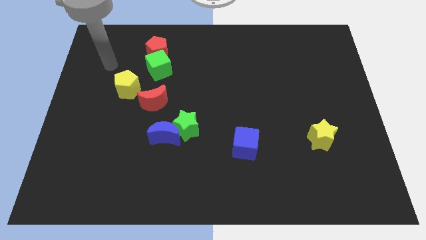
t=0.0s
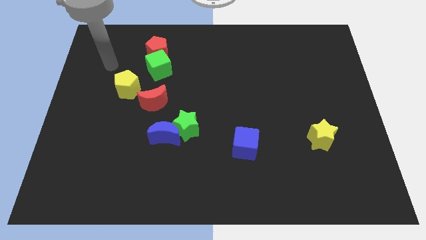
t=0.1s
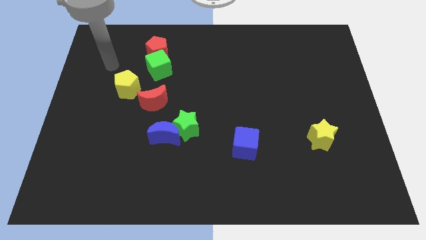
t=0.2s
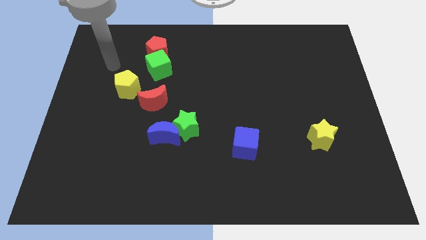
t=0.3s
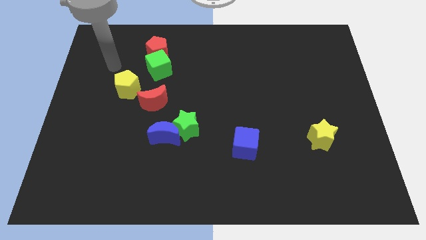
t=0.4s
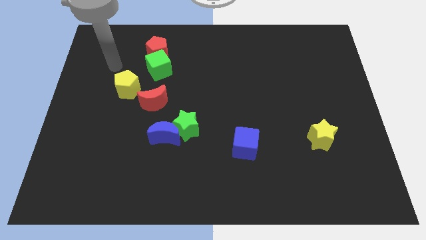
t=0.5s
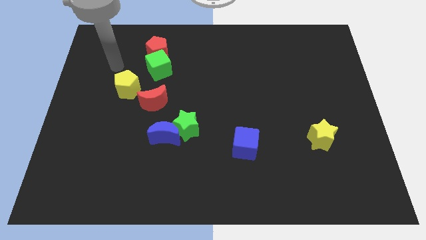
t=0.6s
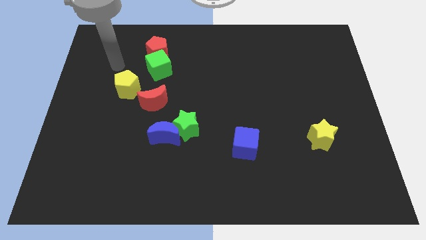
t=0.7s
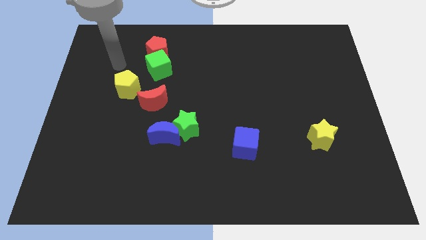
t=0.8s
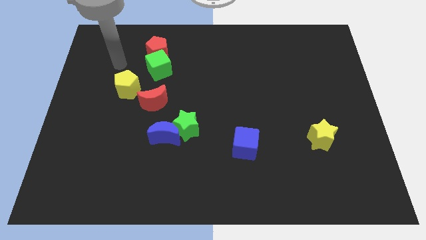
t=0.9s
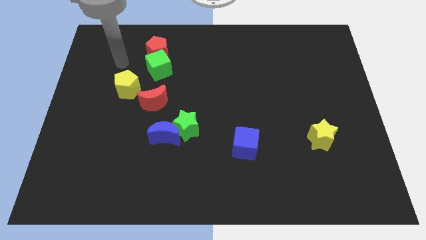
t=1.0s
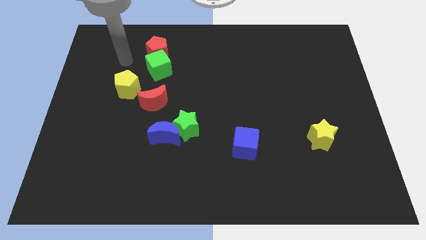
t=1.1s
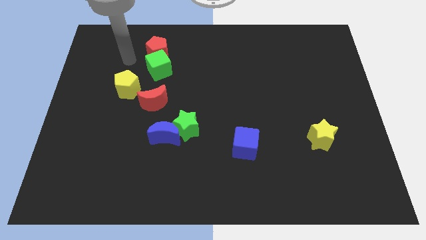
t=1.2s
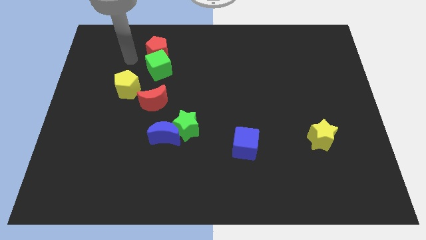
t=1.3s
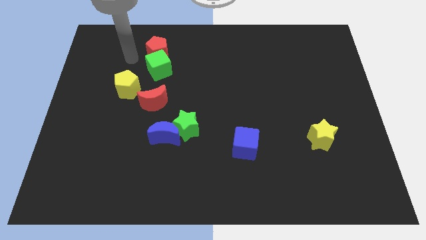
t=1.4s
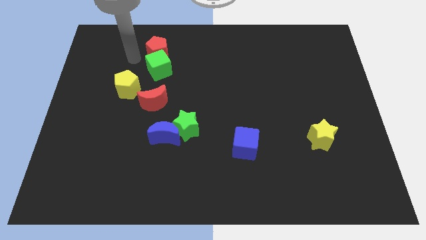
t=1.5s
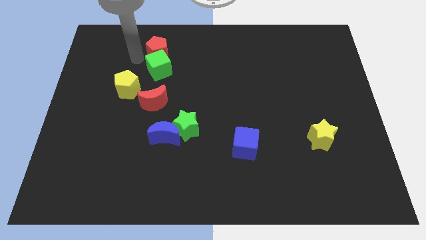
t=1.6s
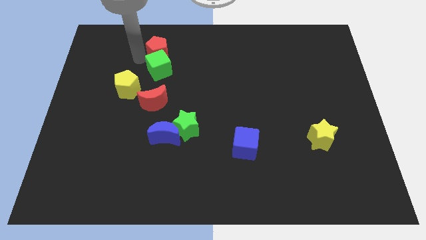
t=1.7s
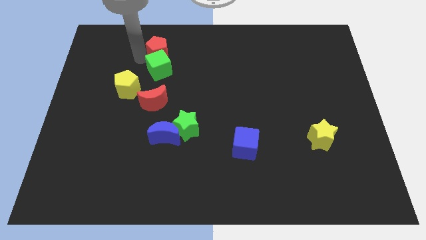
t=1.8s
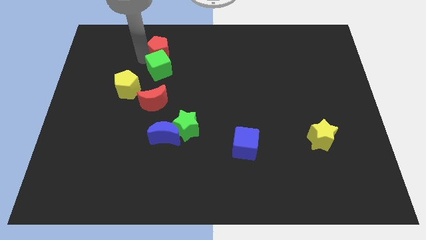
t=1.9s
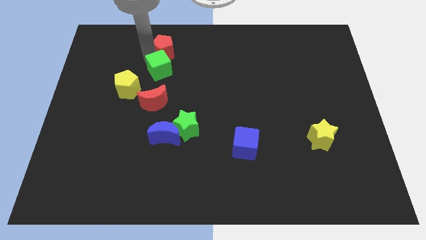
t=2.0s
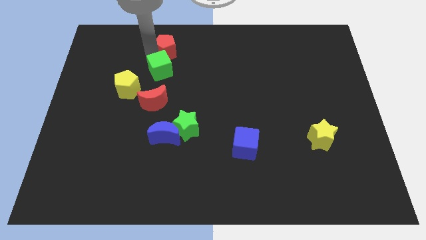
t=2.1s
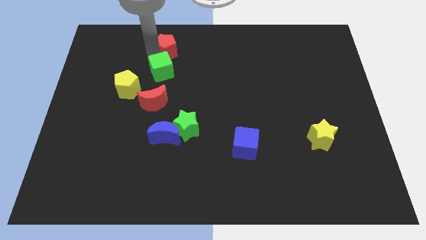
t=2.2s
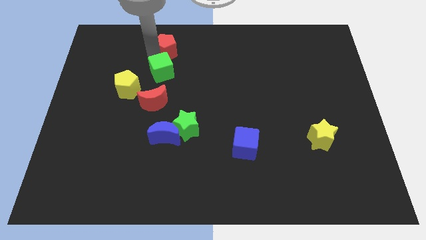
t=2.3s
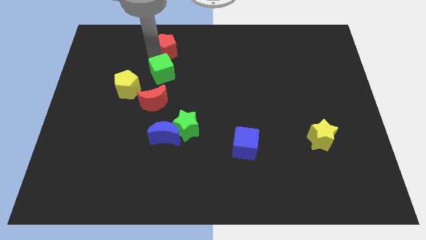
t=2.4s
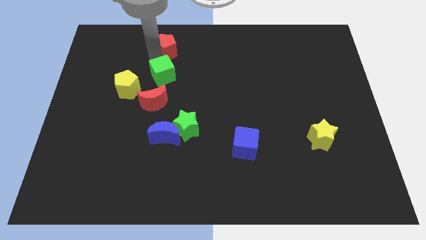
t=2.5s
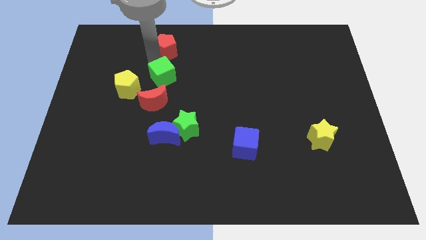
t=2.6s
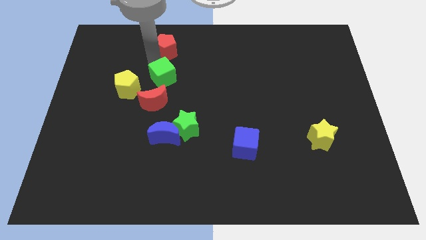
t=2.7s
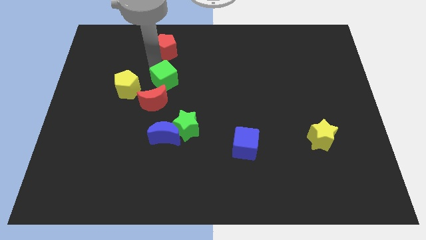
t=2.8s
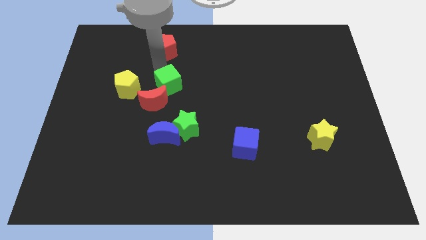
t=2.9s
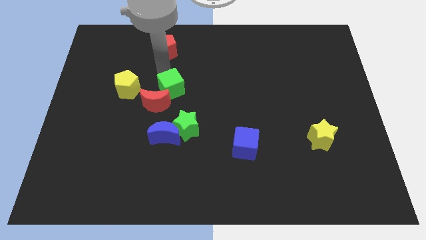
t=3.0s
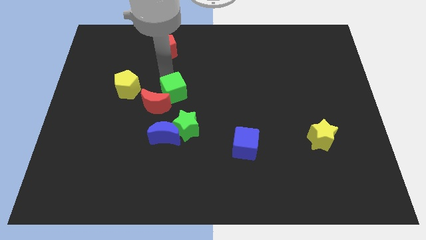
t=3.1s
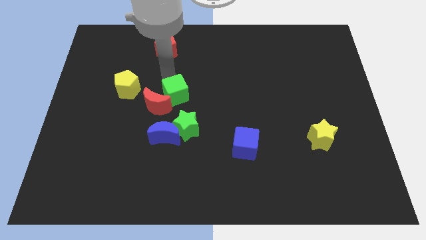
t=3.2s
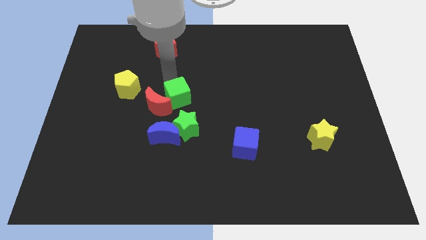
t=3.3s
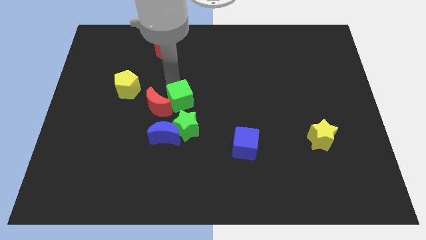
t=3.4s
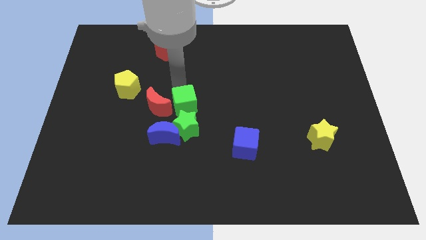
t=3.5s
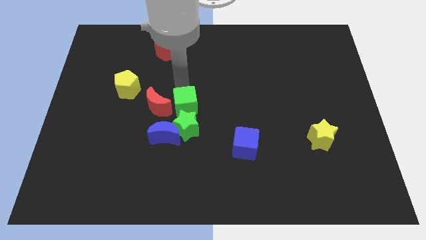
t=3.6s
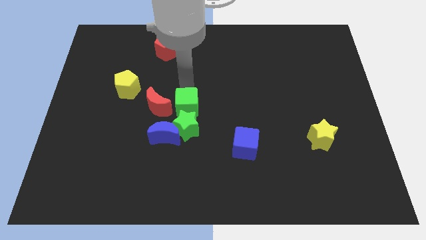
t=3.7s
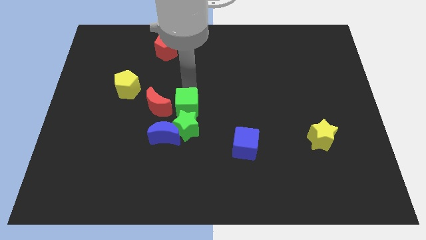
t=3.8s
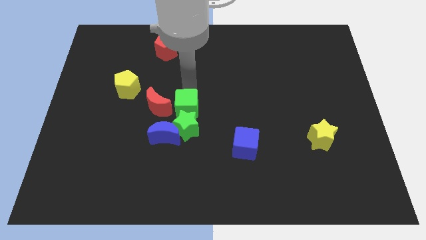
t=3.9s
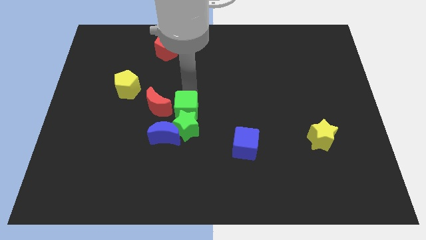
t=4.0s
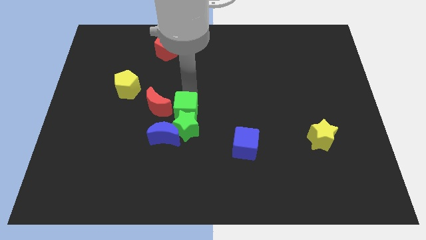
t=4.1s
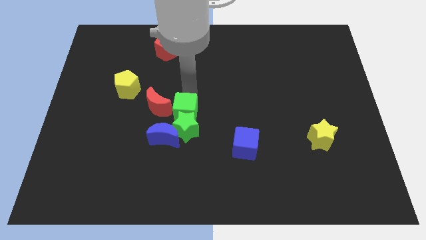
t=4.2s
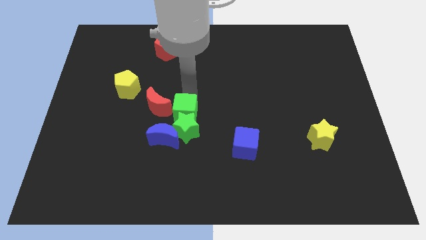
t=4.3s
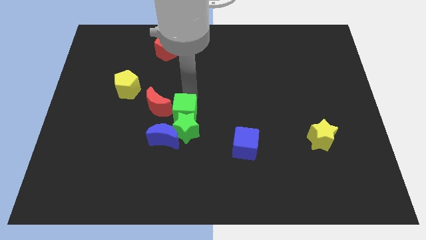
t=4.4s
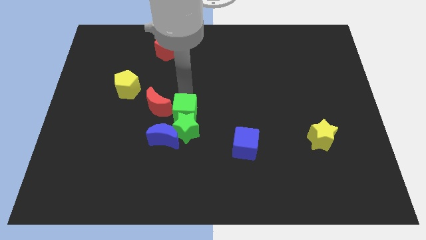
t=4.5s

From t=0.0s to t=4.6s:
move the green cube into the green star

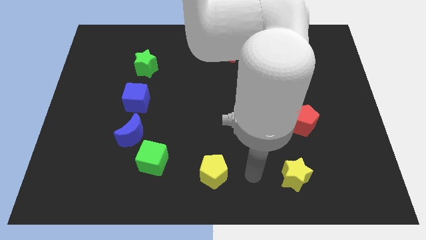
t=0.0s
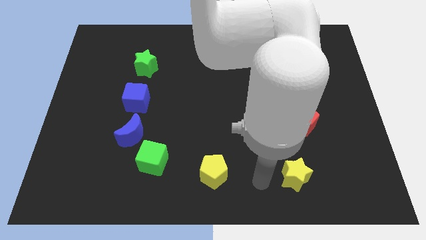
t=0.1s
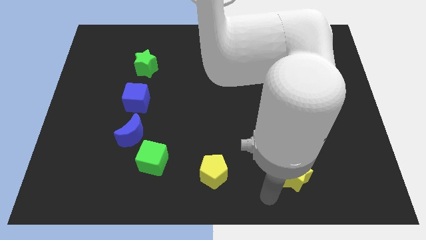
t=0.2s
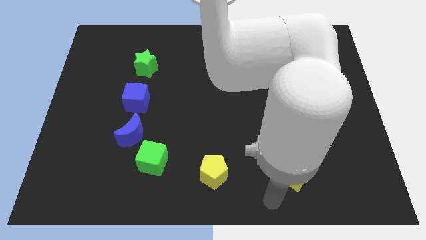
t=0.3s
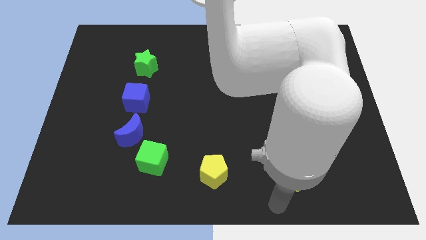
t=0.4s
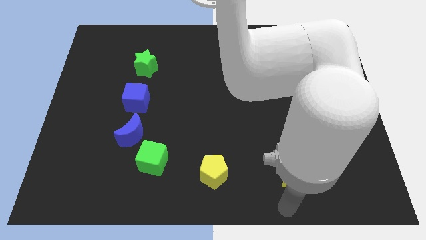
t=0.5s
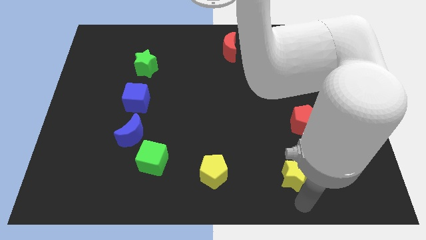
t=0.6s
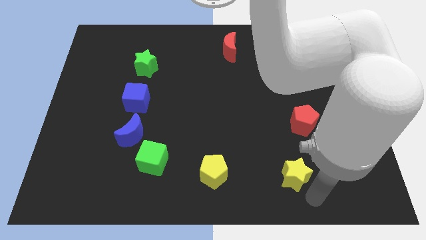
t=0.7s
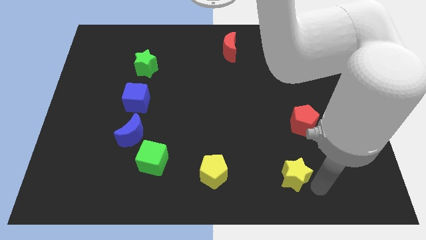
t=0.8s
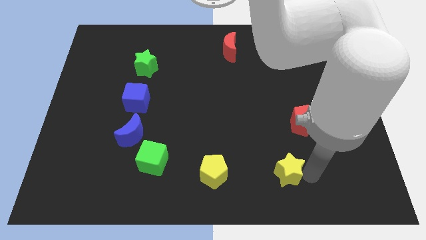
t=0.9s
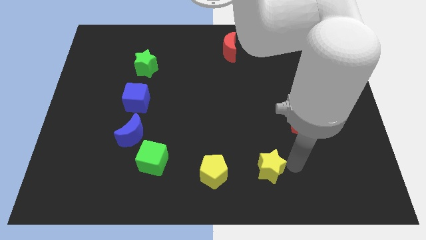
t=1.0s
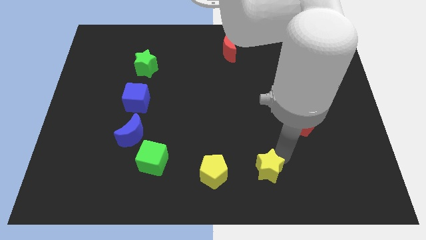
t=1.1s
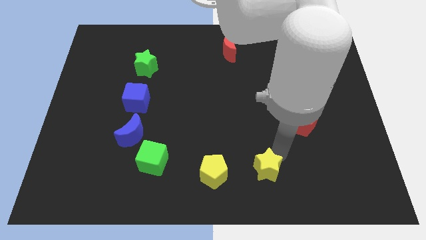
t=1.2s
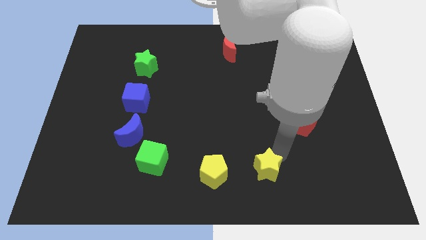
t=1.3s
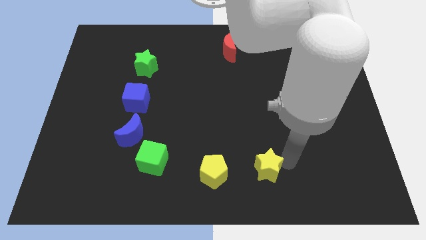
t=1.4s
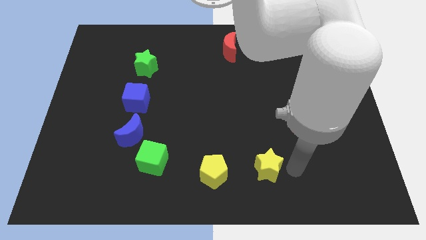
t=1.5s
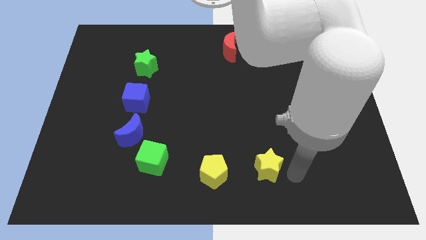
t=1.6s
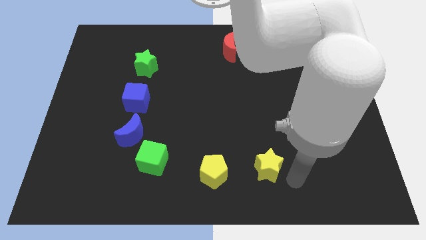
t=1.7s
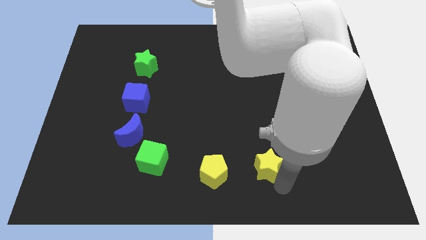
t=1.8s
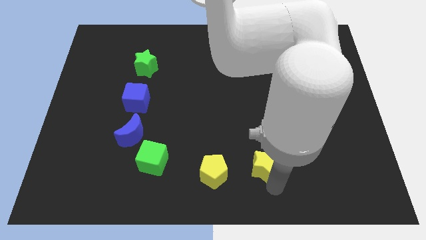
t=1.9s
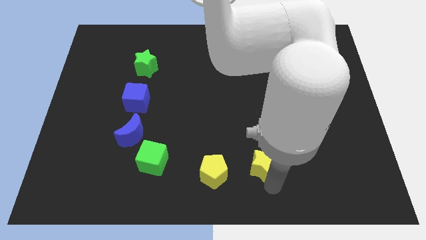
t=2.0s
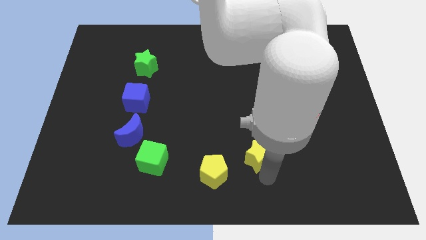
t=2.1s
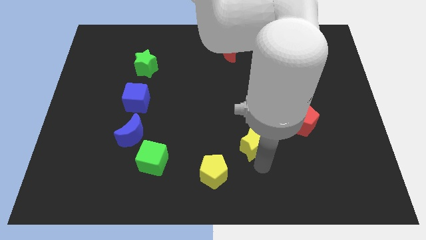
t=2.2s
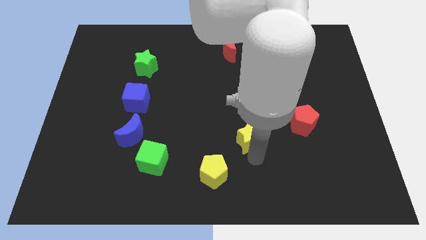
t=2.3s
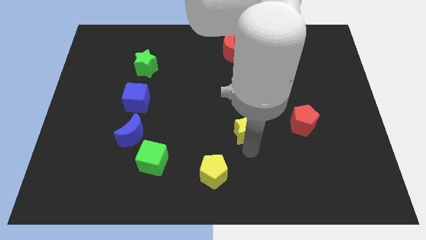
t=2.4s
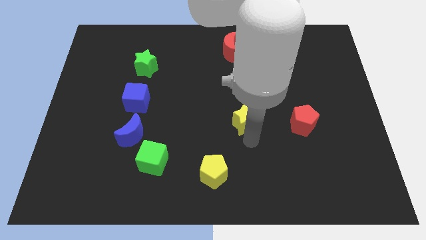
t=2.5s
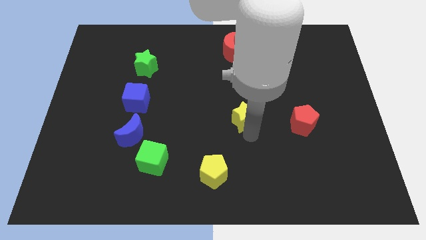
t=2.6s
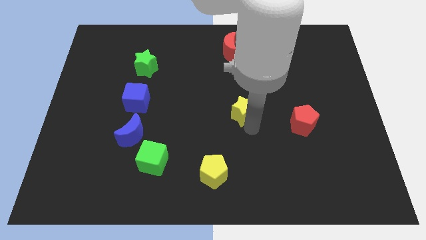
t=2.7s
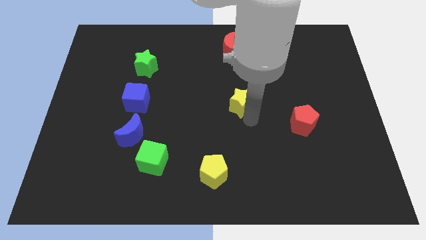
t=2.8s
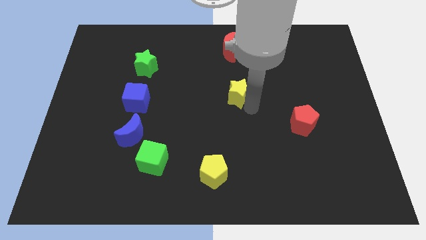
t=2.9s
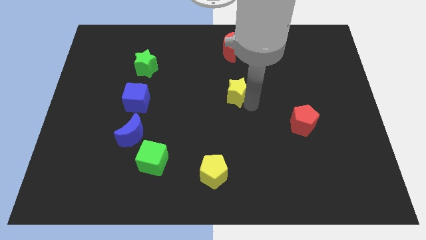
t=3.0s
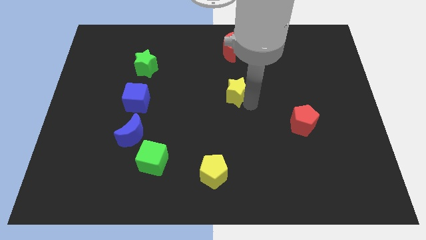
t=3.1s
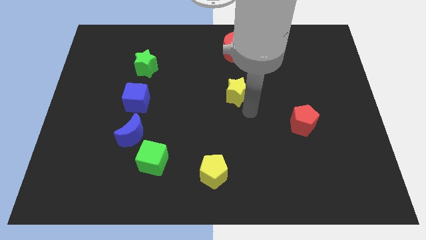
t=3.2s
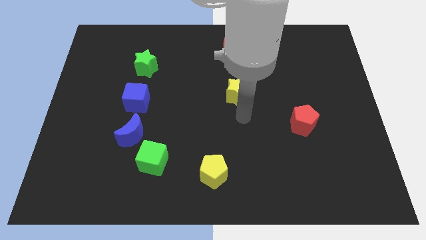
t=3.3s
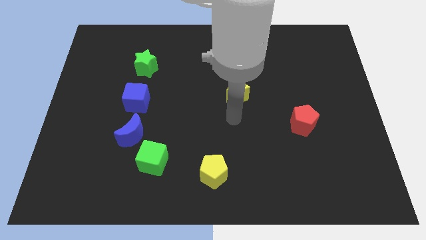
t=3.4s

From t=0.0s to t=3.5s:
move the yellow star below the red crescent

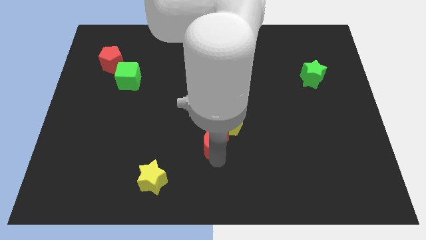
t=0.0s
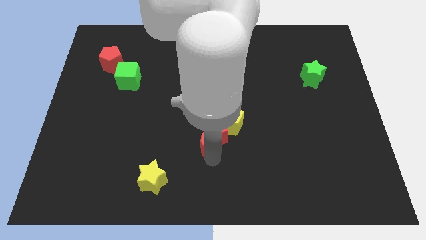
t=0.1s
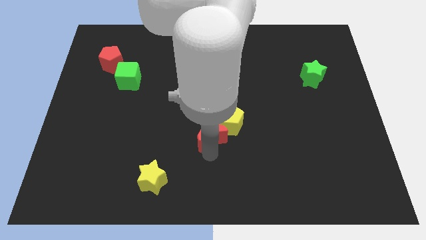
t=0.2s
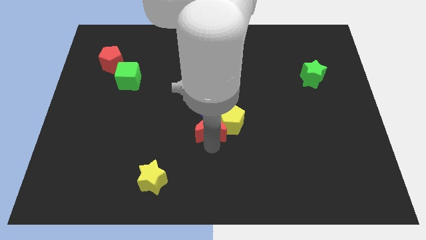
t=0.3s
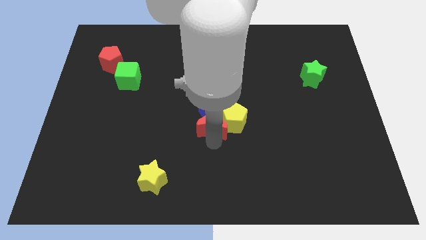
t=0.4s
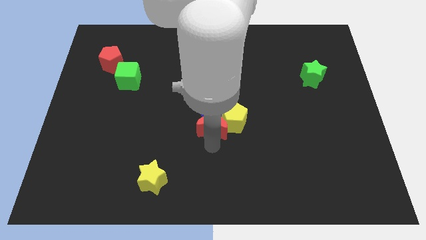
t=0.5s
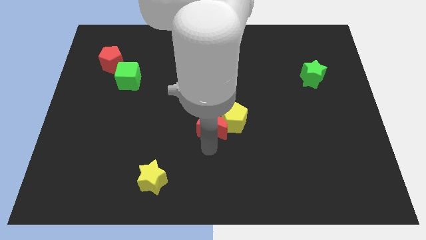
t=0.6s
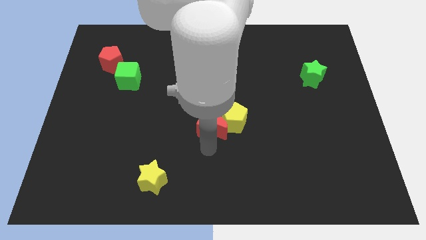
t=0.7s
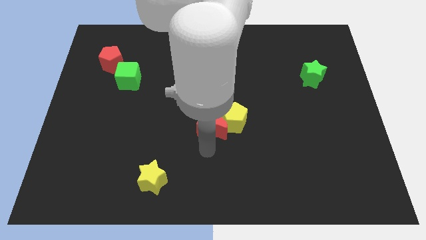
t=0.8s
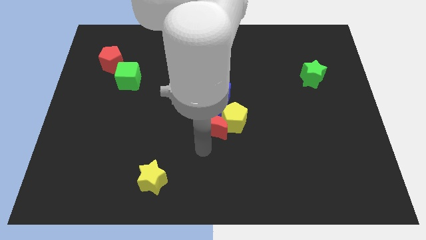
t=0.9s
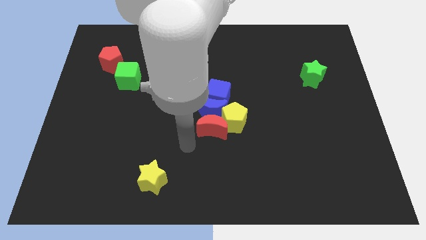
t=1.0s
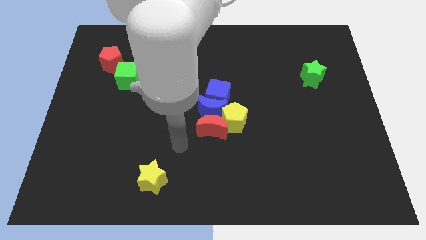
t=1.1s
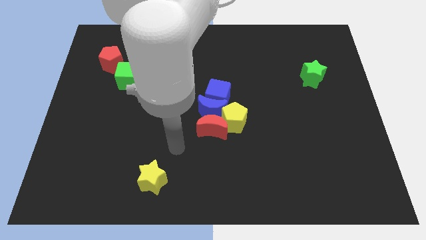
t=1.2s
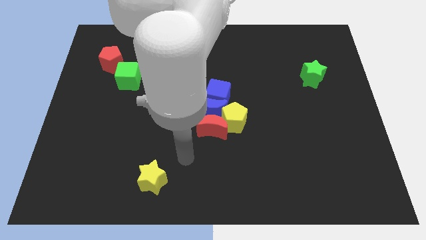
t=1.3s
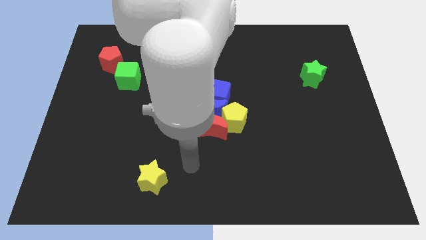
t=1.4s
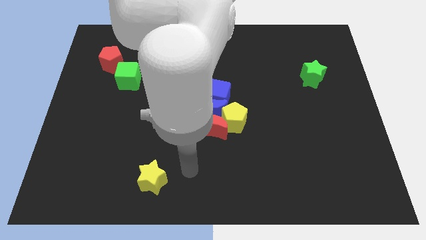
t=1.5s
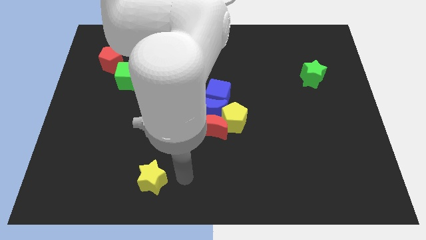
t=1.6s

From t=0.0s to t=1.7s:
push the red crescent to the left of the yellow pentagon
